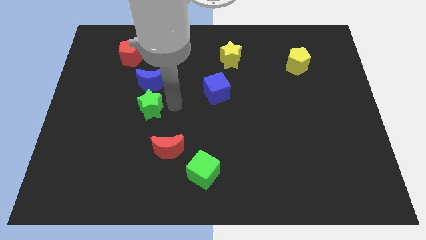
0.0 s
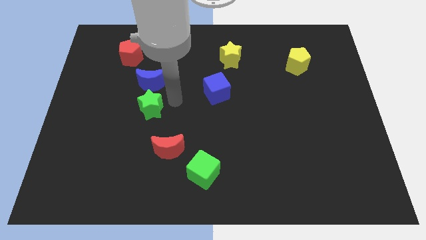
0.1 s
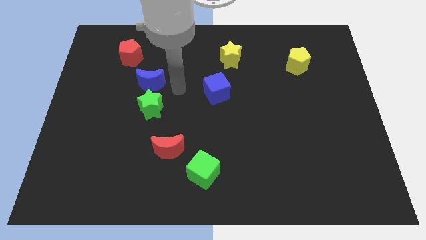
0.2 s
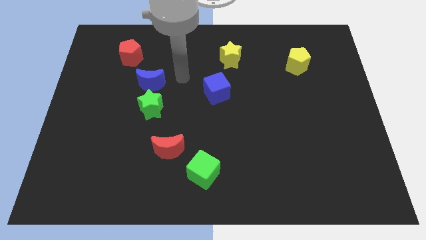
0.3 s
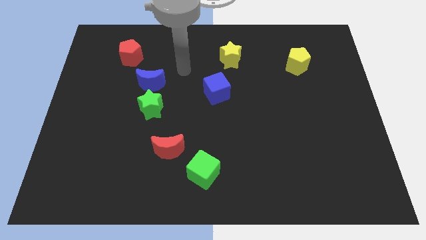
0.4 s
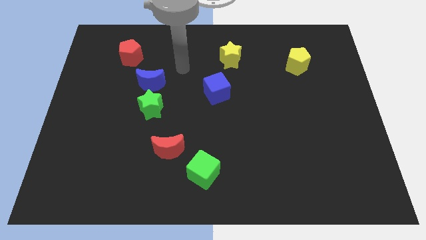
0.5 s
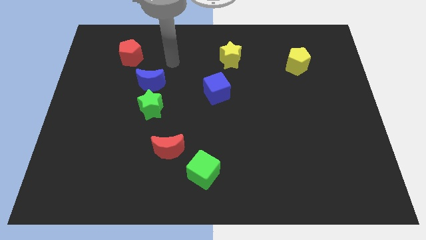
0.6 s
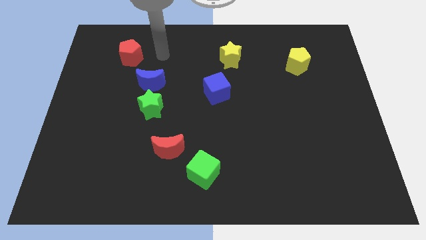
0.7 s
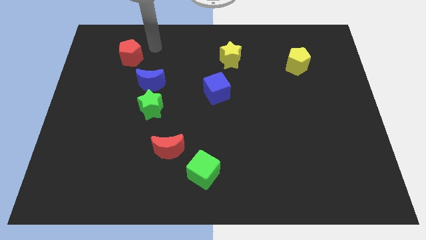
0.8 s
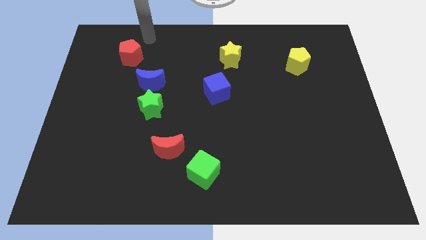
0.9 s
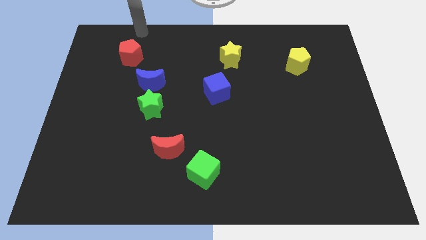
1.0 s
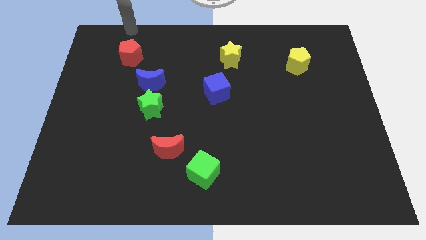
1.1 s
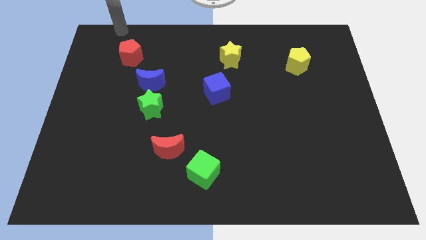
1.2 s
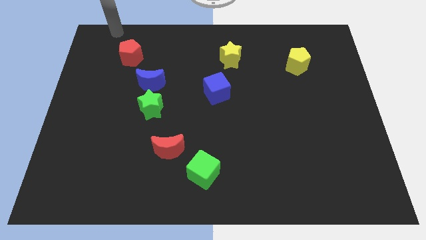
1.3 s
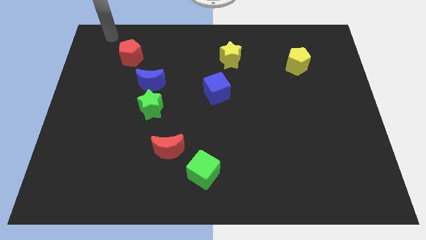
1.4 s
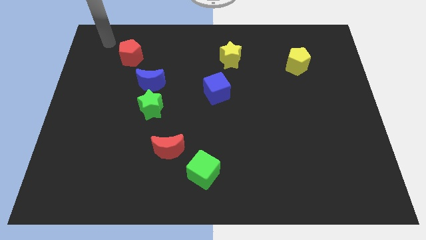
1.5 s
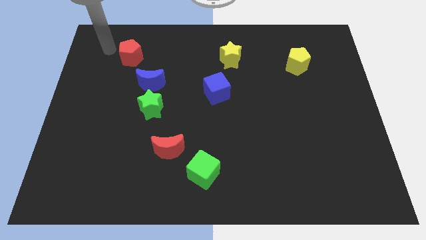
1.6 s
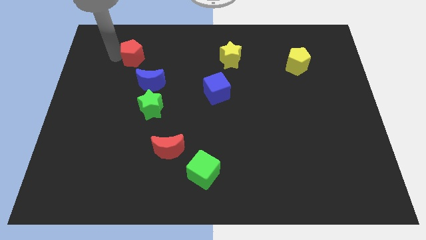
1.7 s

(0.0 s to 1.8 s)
move the arm to the right of the red crescent

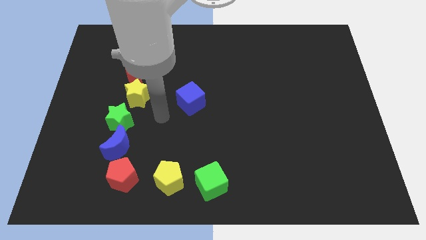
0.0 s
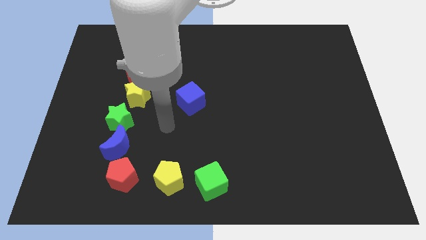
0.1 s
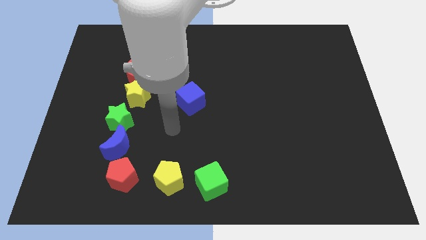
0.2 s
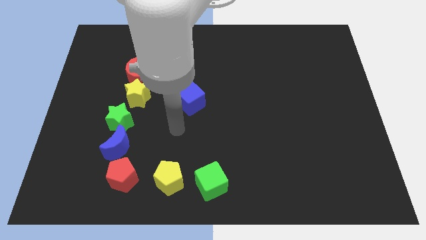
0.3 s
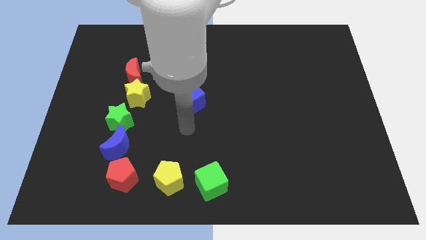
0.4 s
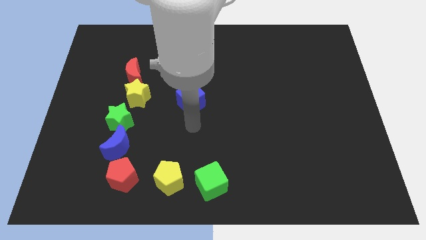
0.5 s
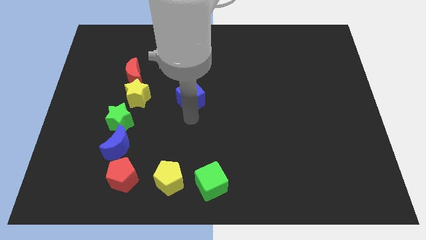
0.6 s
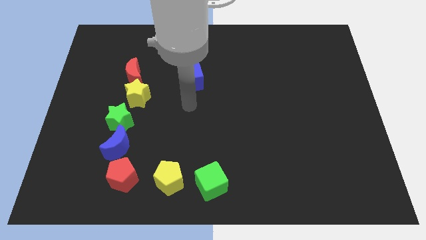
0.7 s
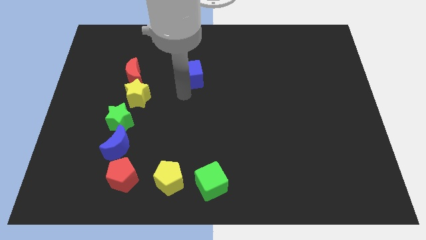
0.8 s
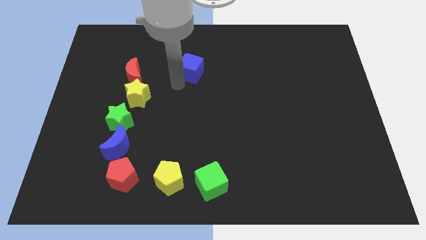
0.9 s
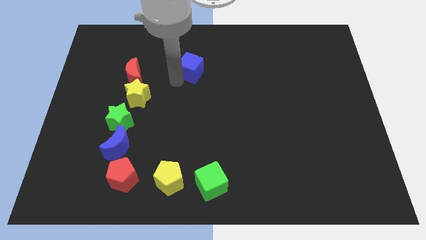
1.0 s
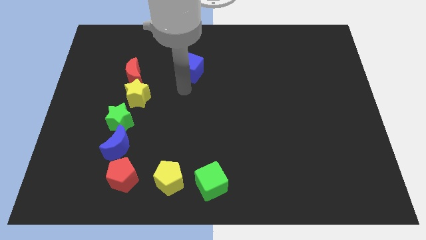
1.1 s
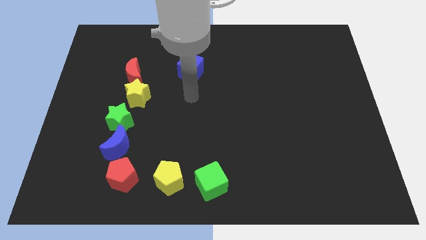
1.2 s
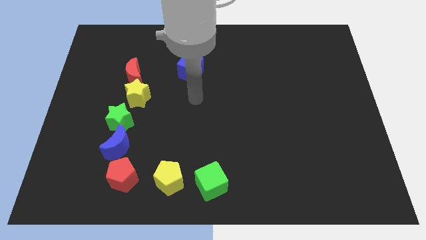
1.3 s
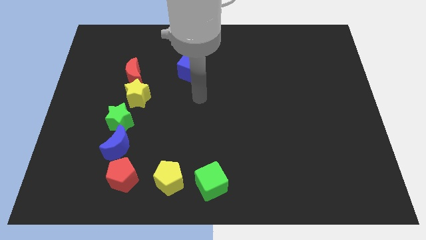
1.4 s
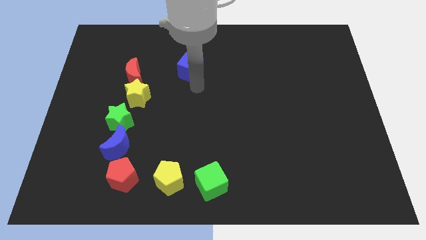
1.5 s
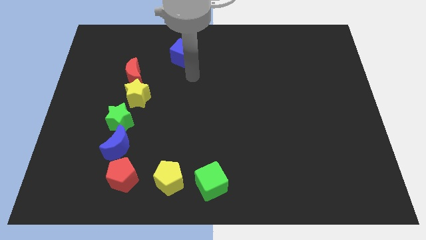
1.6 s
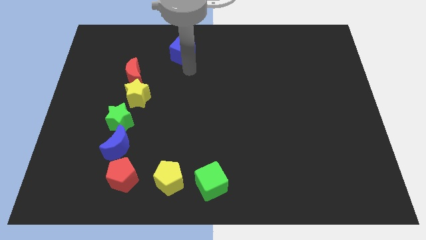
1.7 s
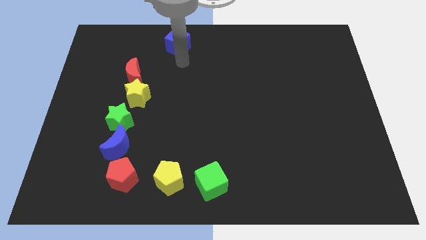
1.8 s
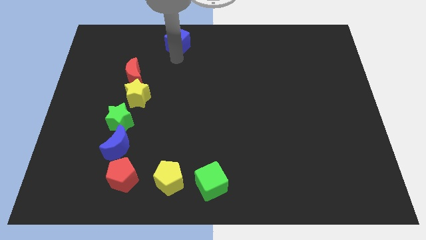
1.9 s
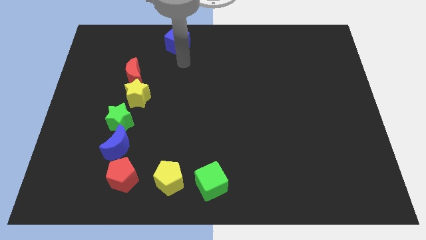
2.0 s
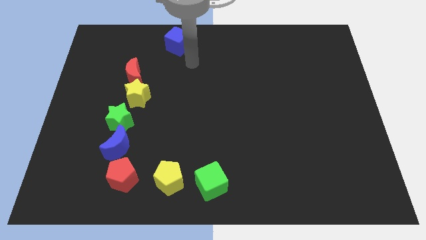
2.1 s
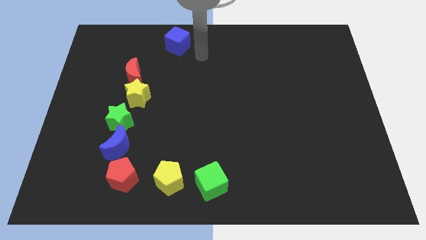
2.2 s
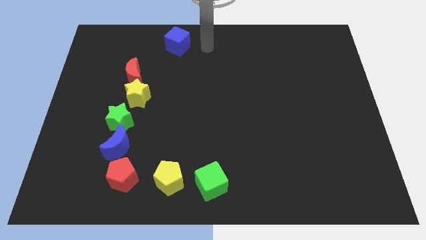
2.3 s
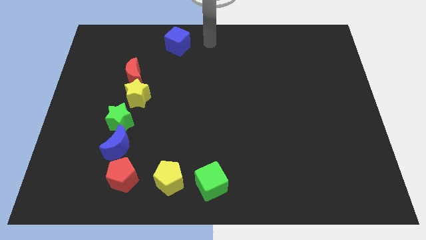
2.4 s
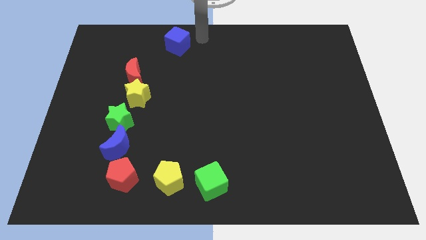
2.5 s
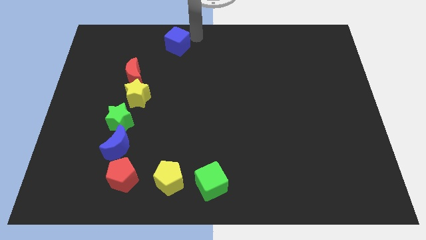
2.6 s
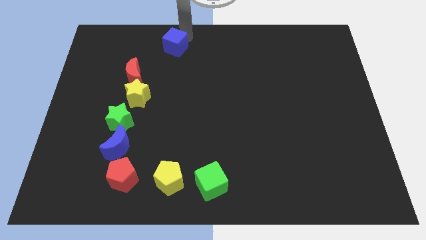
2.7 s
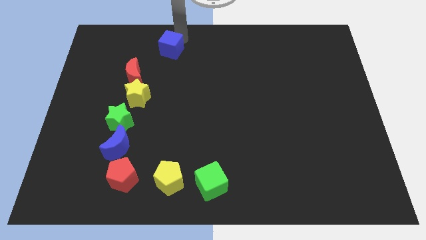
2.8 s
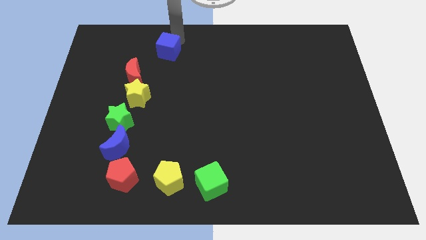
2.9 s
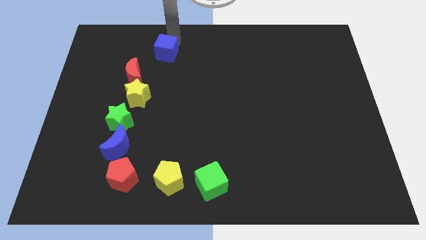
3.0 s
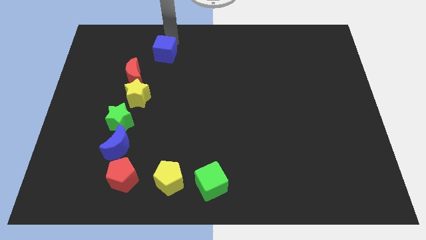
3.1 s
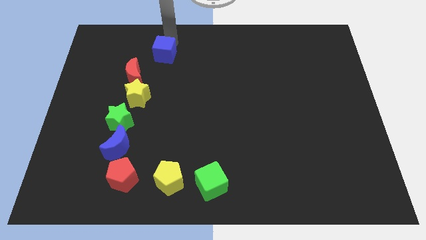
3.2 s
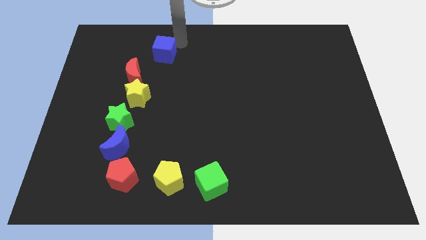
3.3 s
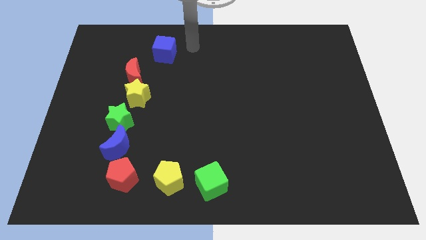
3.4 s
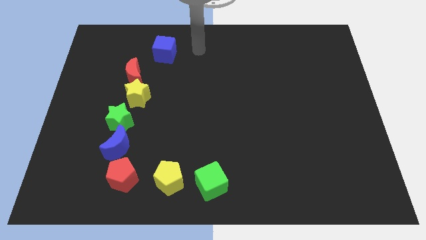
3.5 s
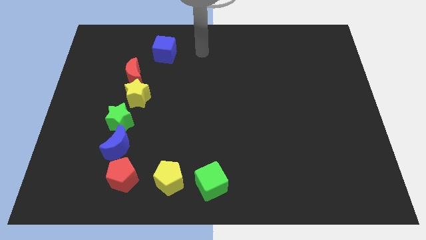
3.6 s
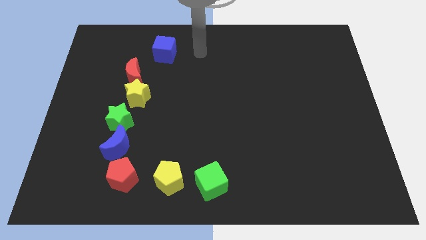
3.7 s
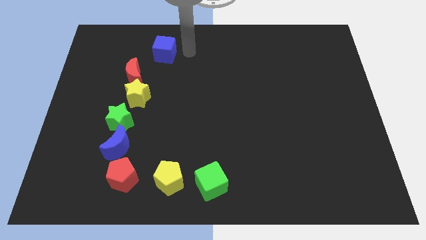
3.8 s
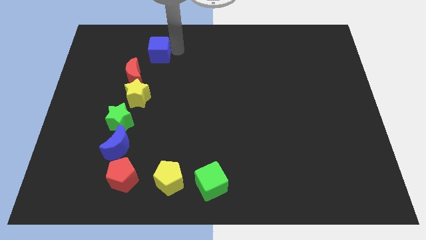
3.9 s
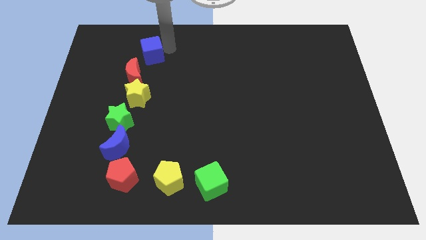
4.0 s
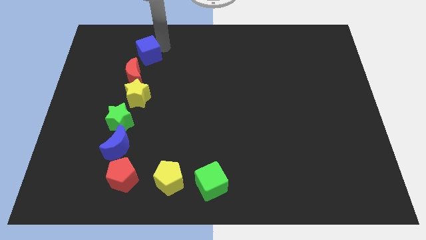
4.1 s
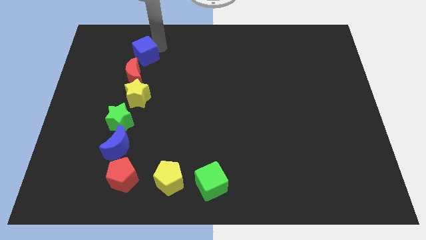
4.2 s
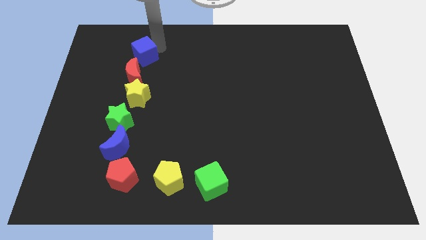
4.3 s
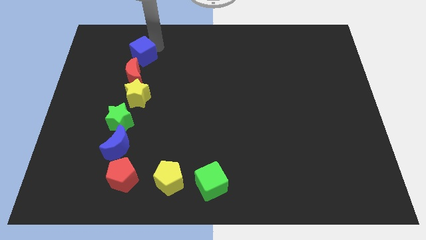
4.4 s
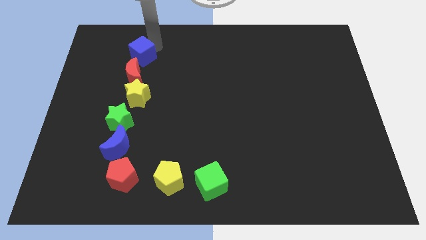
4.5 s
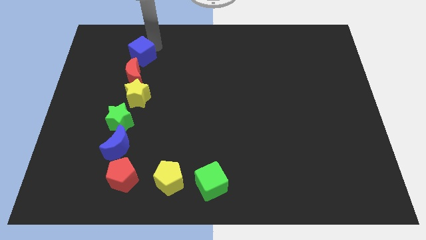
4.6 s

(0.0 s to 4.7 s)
move the blue cube above the red moon

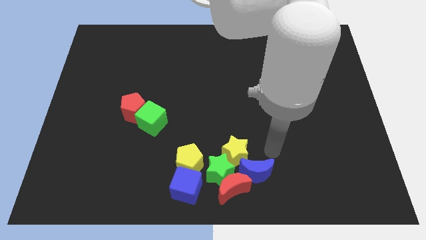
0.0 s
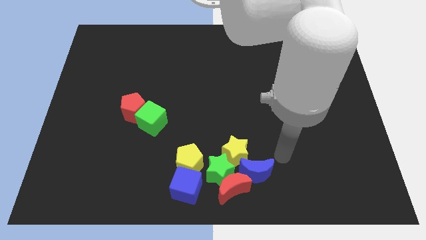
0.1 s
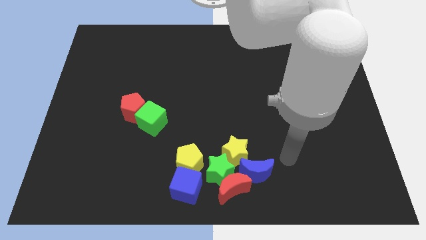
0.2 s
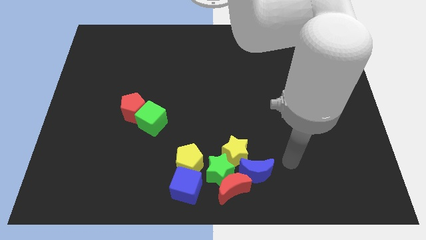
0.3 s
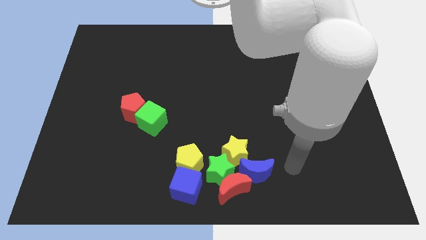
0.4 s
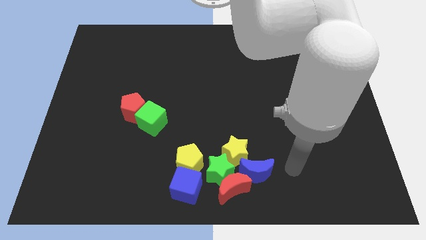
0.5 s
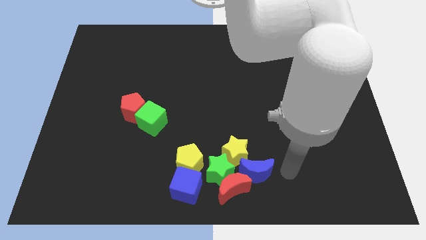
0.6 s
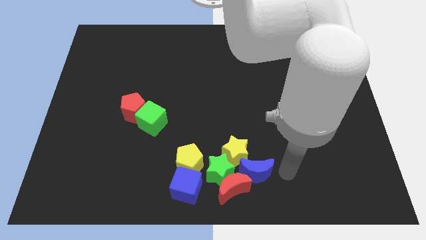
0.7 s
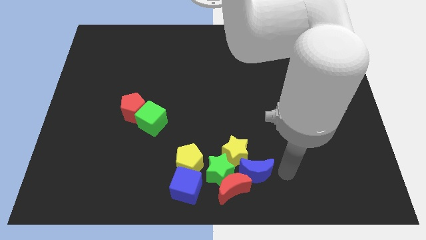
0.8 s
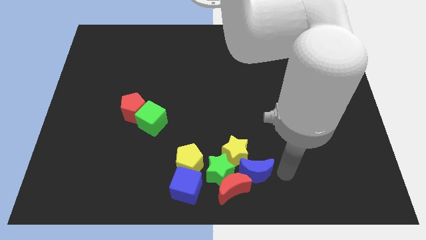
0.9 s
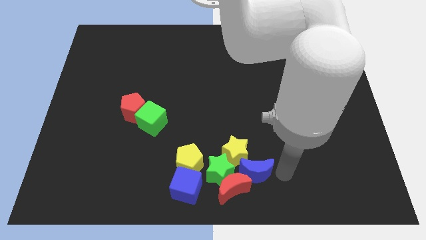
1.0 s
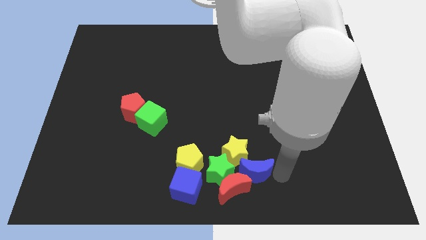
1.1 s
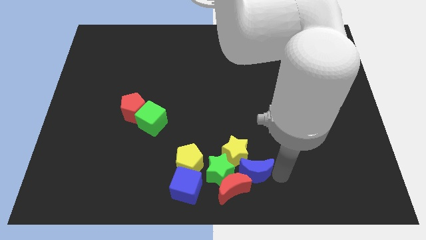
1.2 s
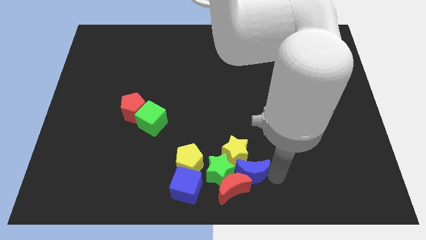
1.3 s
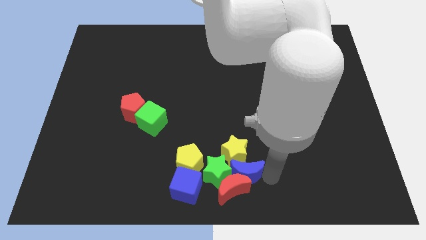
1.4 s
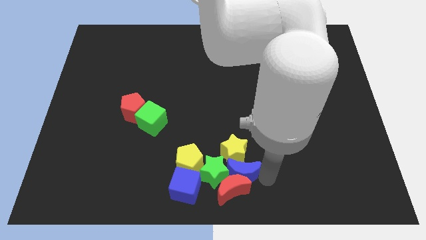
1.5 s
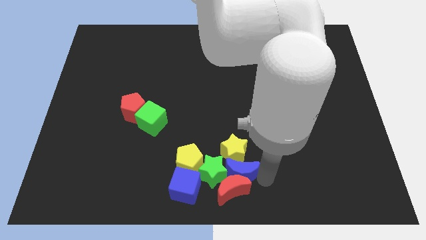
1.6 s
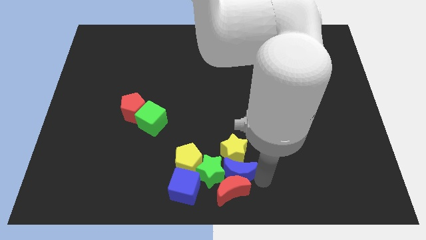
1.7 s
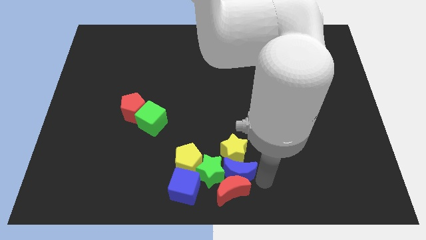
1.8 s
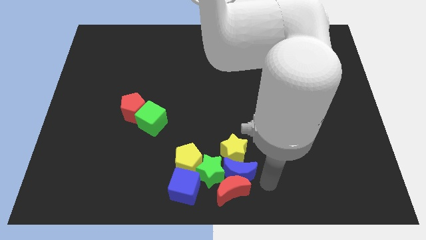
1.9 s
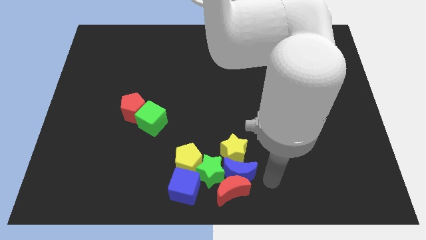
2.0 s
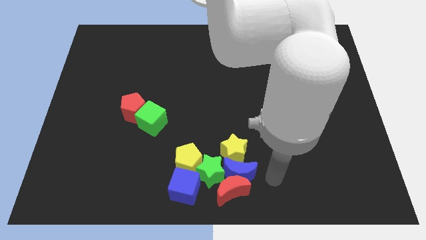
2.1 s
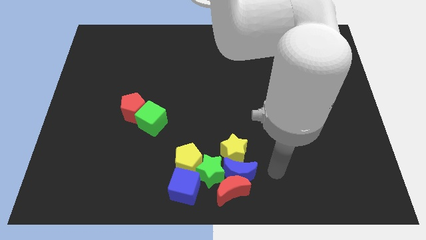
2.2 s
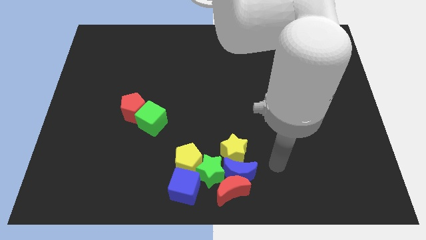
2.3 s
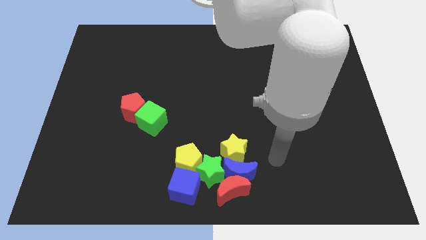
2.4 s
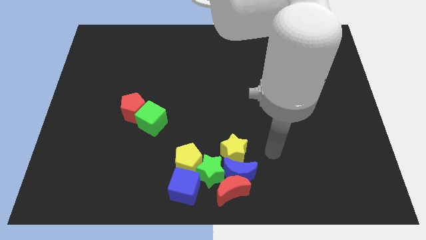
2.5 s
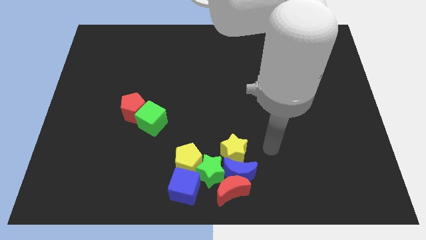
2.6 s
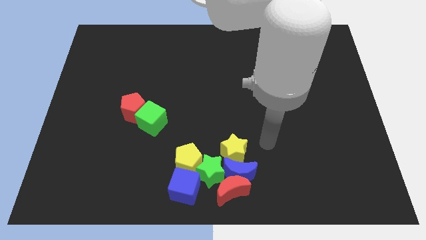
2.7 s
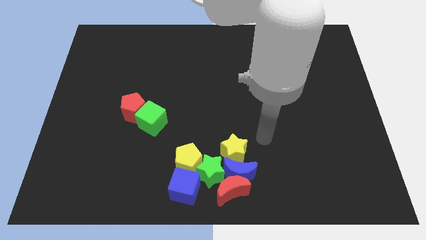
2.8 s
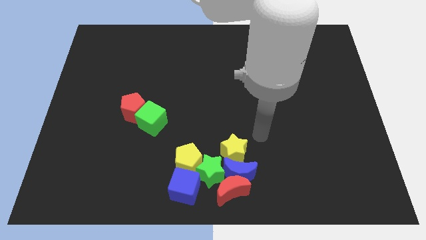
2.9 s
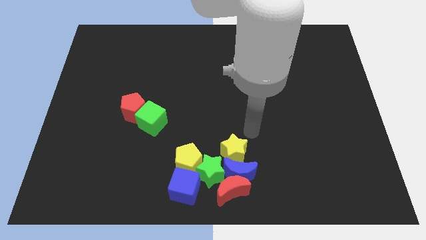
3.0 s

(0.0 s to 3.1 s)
push the blue crescent into the group of blocks
